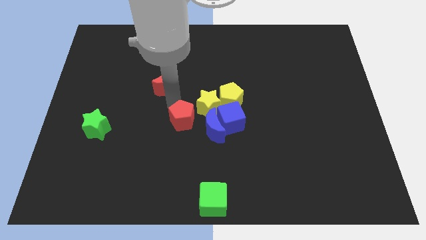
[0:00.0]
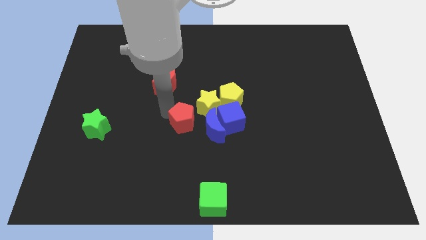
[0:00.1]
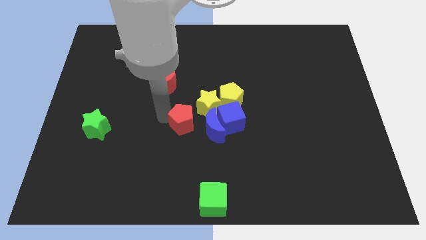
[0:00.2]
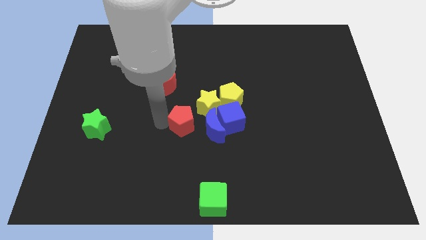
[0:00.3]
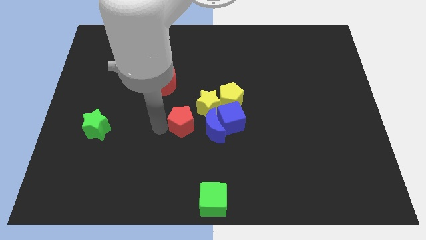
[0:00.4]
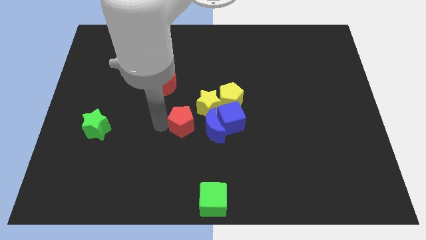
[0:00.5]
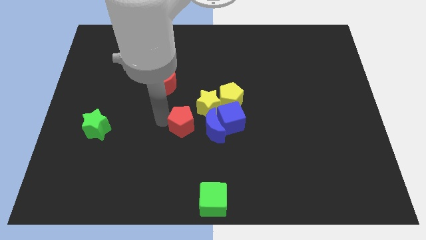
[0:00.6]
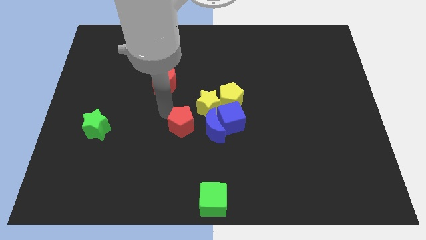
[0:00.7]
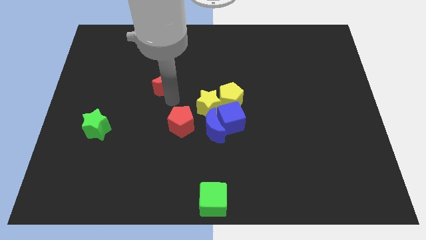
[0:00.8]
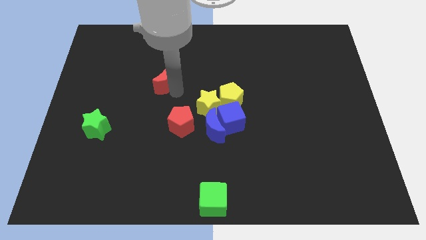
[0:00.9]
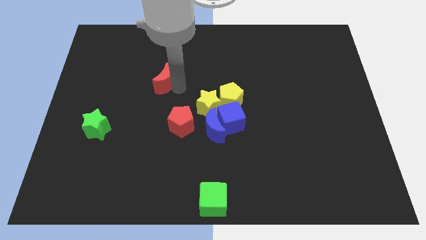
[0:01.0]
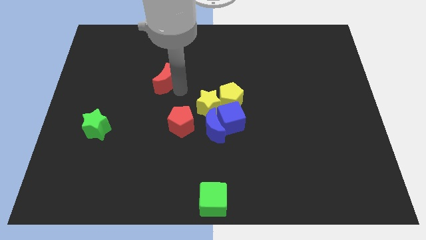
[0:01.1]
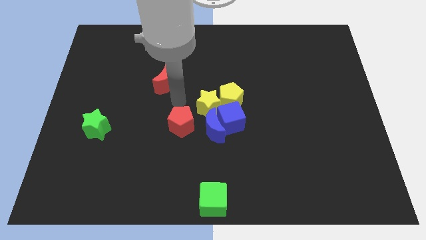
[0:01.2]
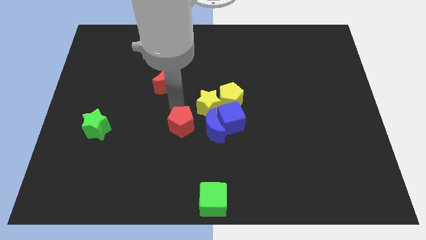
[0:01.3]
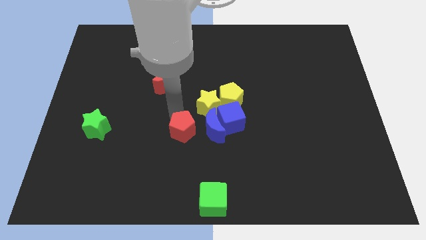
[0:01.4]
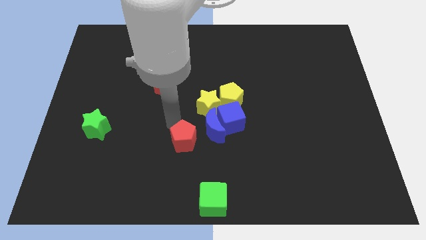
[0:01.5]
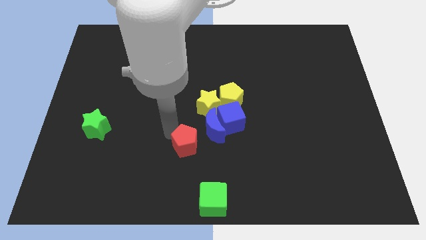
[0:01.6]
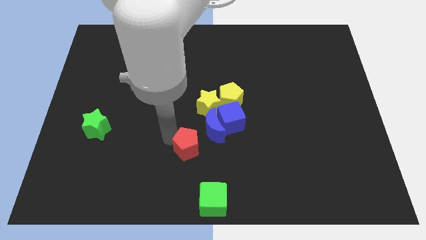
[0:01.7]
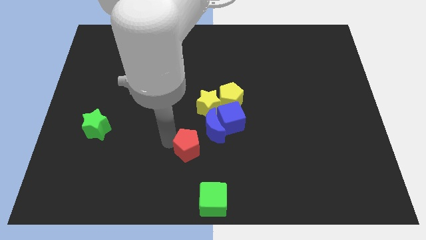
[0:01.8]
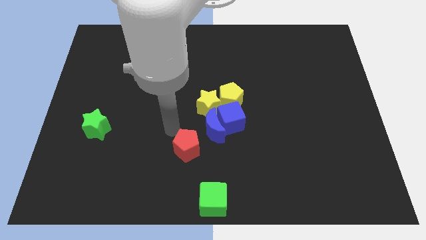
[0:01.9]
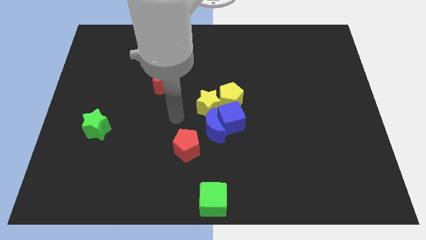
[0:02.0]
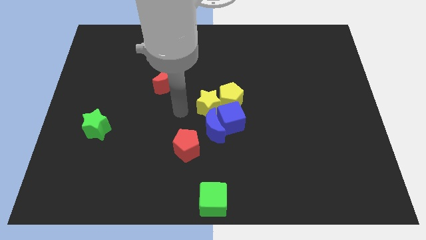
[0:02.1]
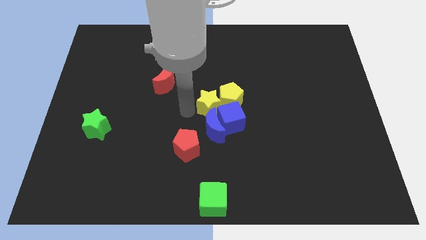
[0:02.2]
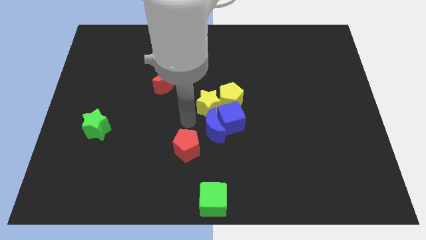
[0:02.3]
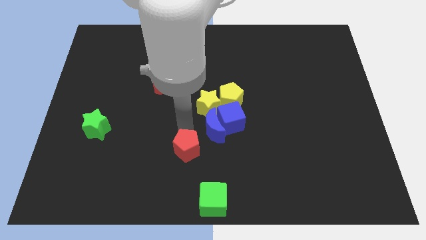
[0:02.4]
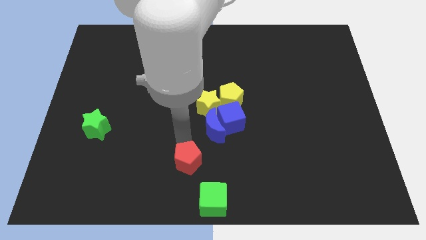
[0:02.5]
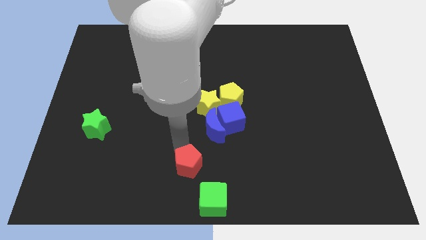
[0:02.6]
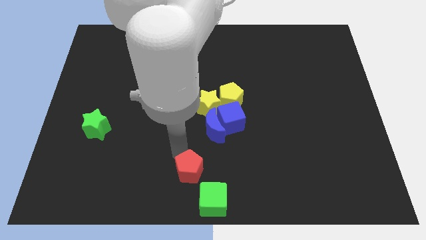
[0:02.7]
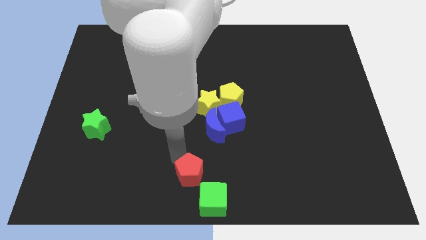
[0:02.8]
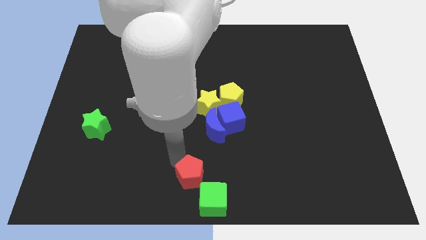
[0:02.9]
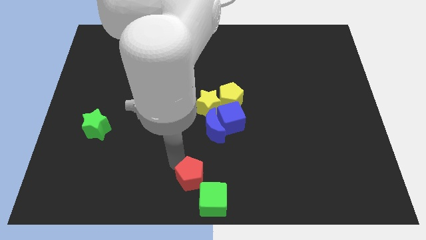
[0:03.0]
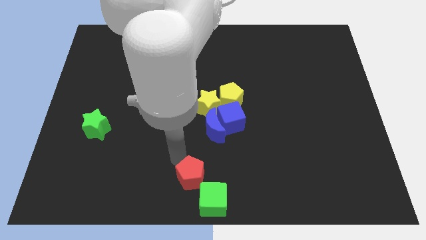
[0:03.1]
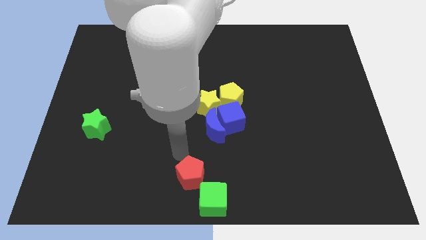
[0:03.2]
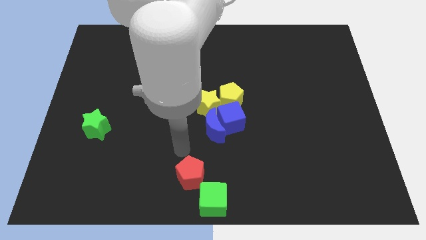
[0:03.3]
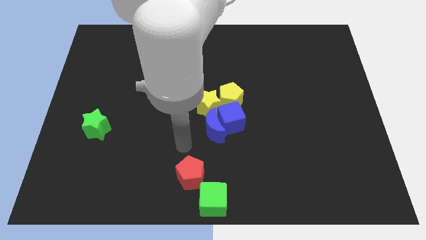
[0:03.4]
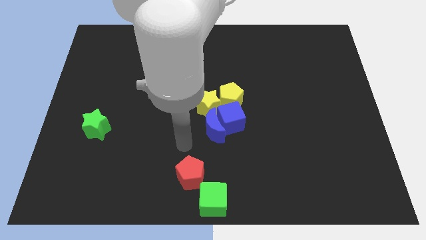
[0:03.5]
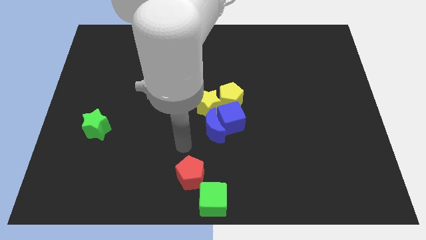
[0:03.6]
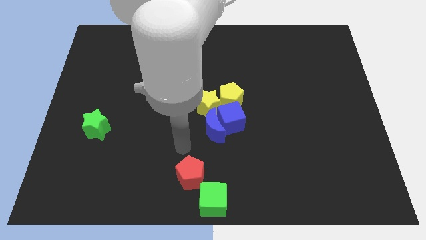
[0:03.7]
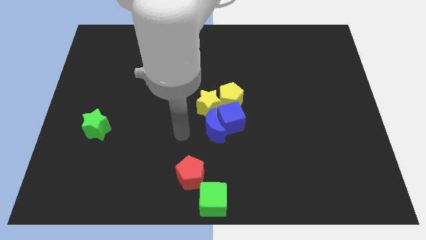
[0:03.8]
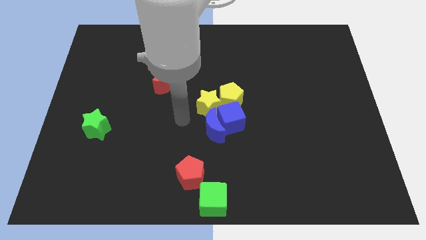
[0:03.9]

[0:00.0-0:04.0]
place the red pentagon above the green cube

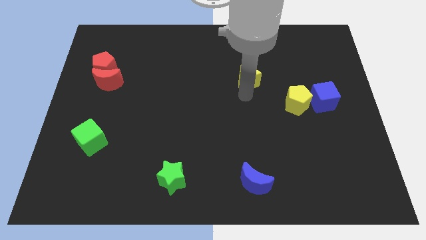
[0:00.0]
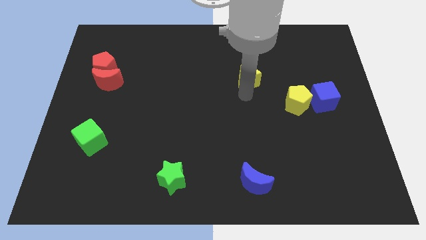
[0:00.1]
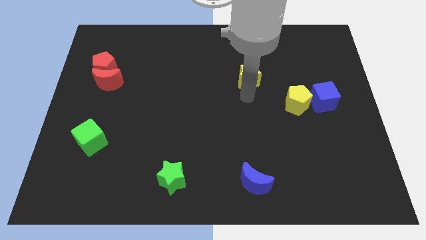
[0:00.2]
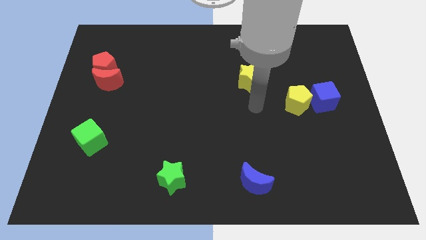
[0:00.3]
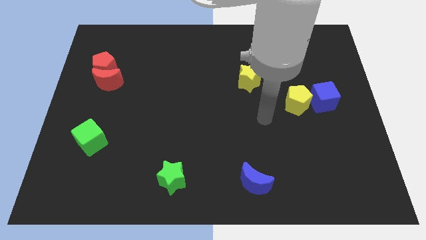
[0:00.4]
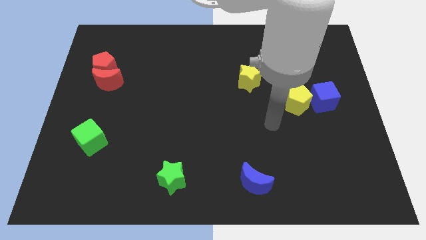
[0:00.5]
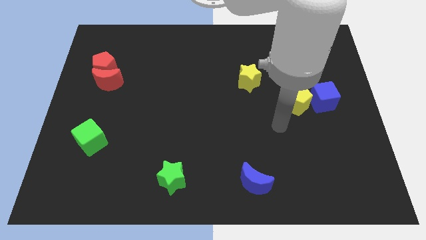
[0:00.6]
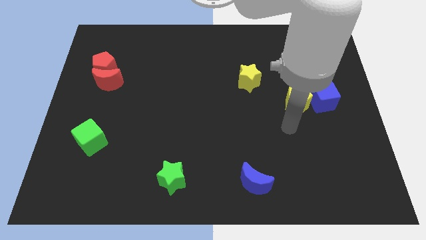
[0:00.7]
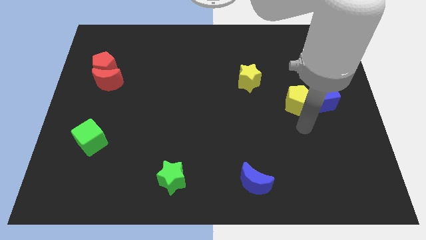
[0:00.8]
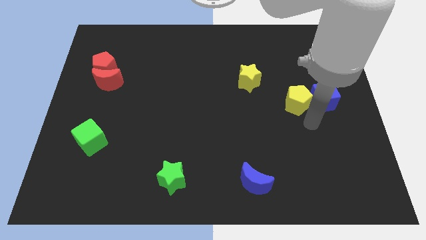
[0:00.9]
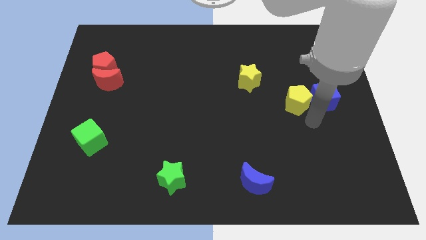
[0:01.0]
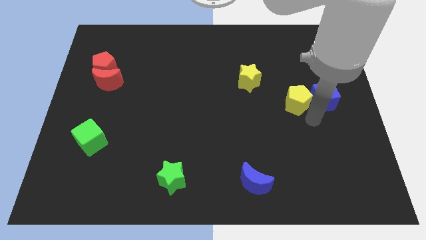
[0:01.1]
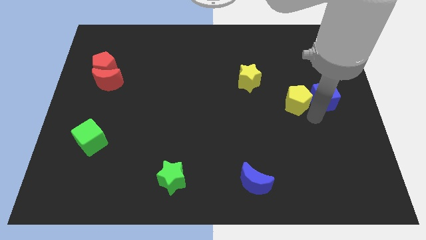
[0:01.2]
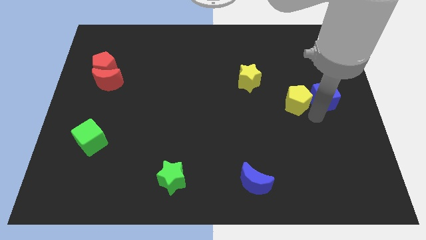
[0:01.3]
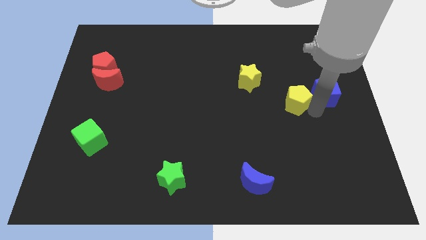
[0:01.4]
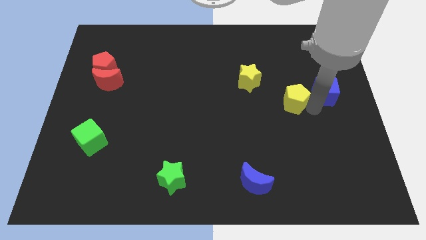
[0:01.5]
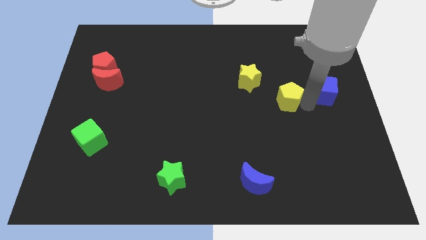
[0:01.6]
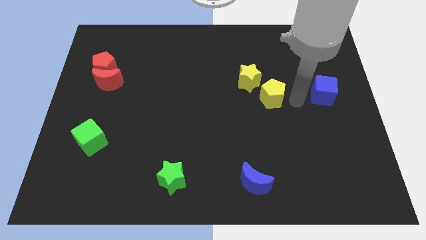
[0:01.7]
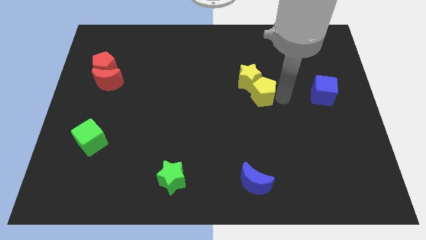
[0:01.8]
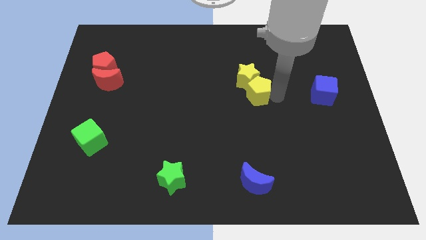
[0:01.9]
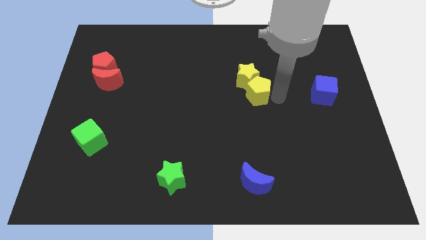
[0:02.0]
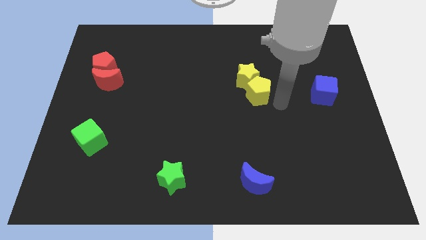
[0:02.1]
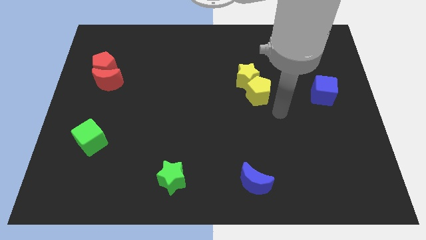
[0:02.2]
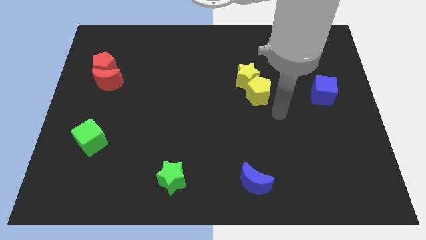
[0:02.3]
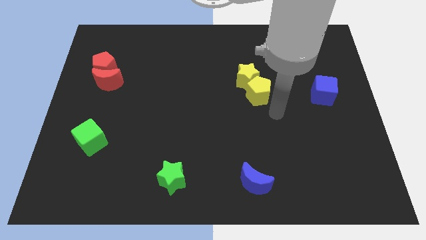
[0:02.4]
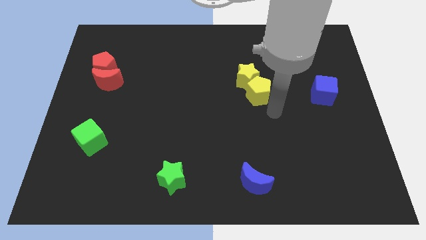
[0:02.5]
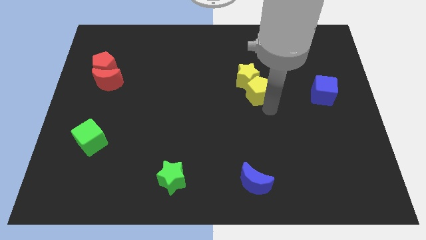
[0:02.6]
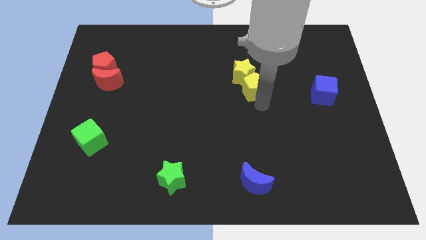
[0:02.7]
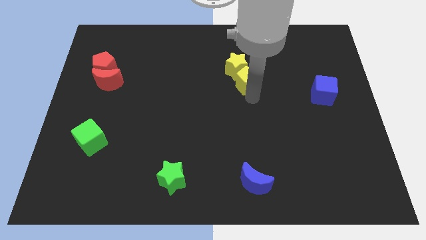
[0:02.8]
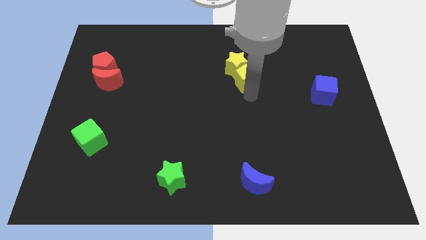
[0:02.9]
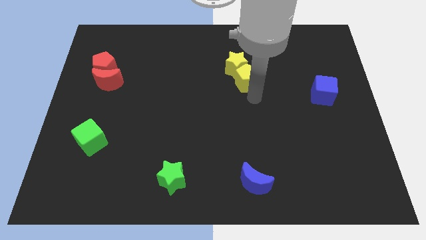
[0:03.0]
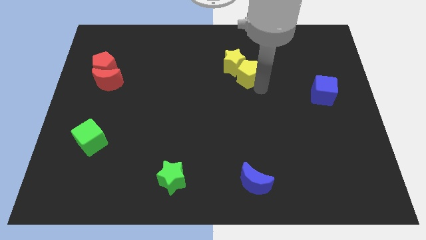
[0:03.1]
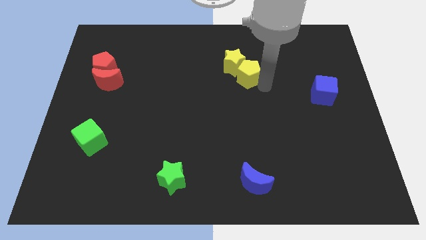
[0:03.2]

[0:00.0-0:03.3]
push the yellow blocks to the top side of the table

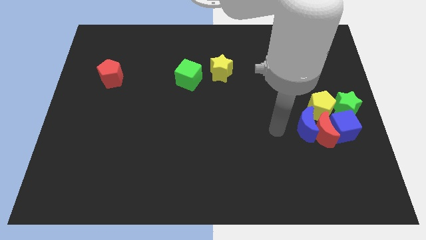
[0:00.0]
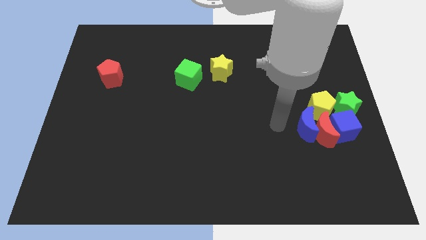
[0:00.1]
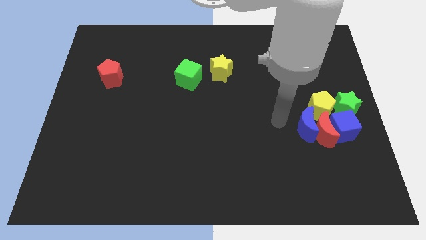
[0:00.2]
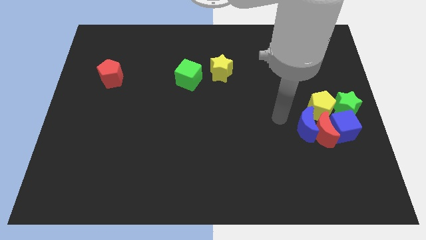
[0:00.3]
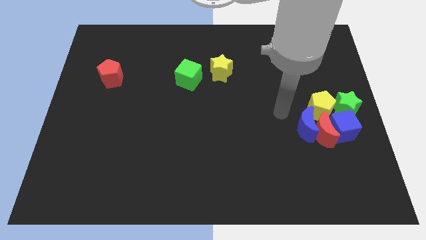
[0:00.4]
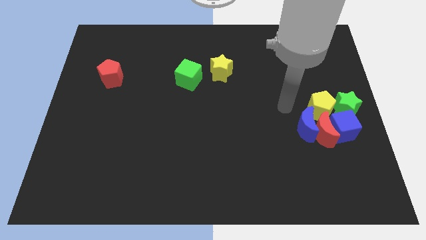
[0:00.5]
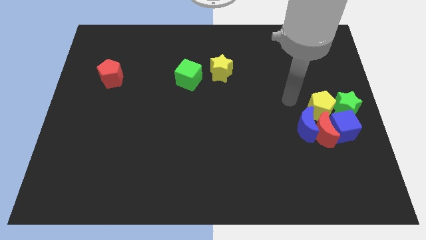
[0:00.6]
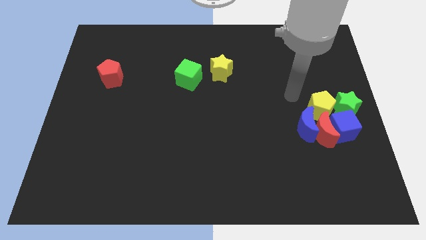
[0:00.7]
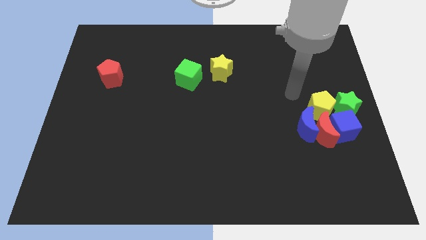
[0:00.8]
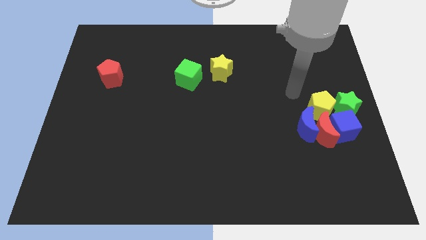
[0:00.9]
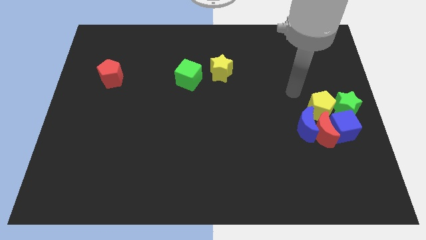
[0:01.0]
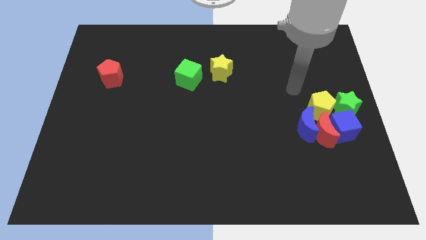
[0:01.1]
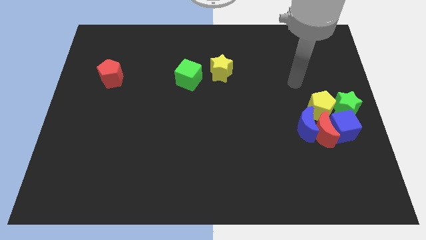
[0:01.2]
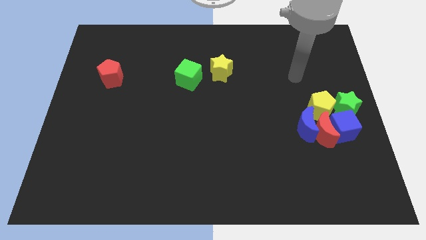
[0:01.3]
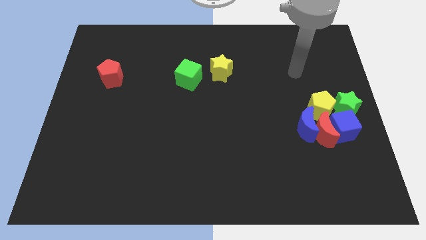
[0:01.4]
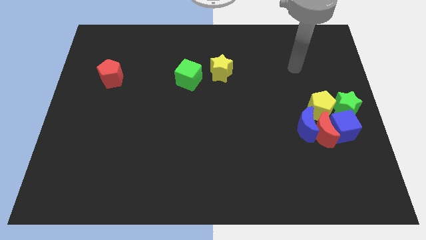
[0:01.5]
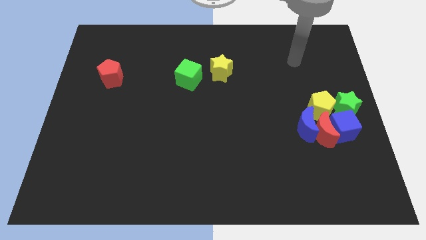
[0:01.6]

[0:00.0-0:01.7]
push the blue moon into the red moon
